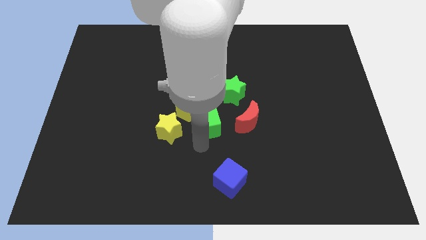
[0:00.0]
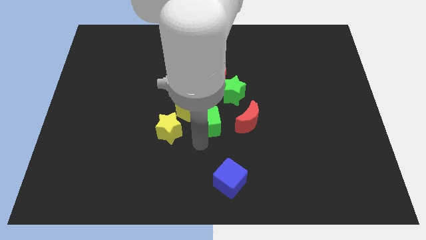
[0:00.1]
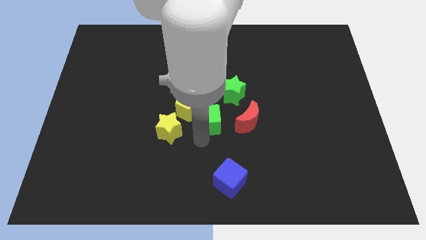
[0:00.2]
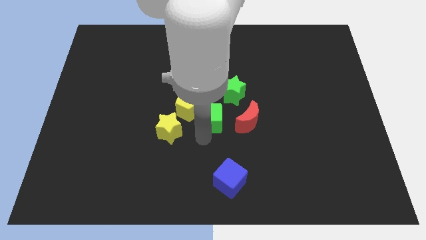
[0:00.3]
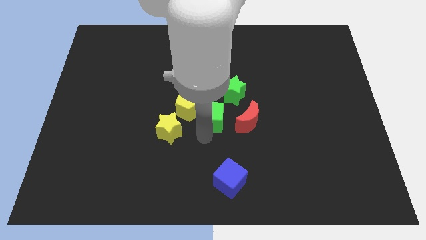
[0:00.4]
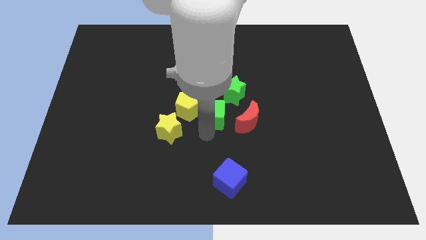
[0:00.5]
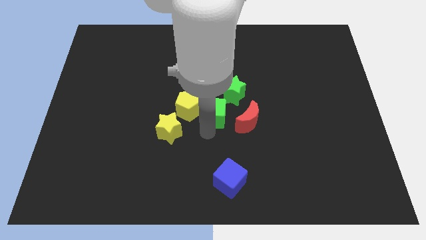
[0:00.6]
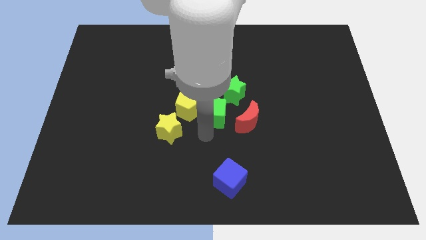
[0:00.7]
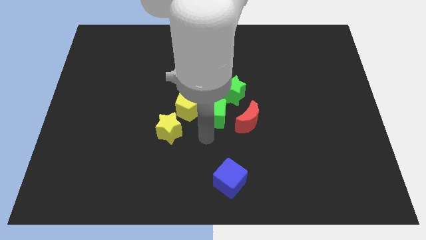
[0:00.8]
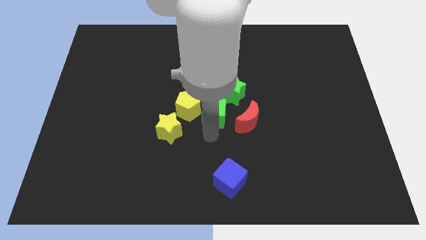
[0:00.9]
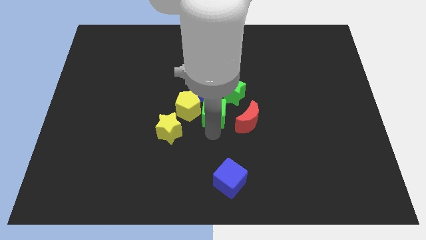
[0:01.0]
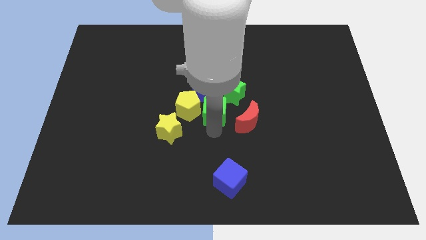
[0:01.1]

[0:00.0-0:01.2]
move the green cube to the right side of the yellow pentagon

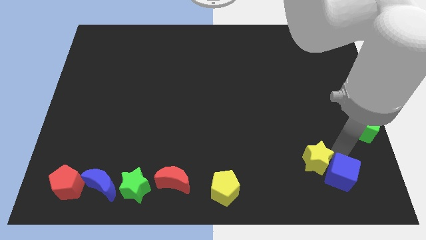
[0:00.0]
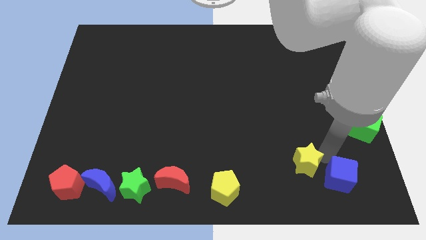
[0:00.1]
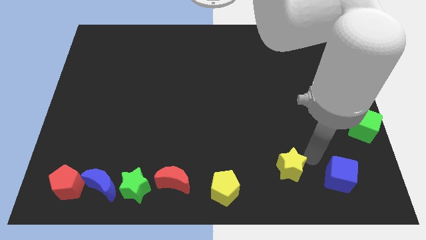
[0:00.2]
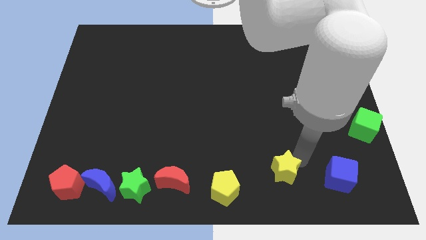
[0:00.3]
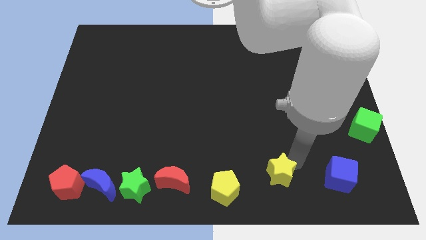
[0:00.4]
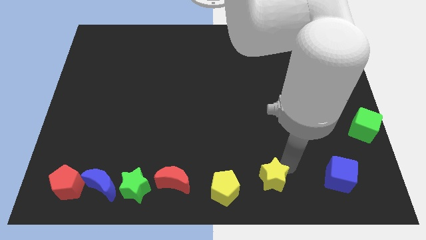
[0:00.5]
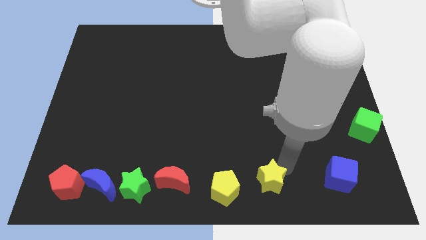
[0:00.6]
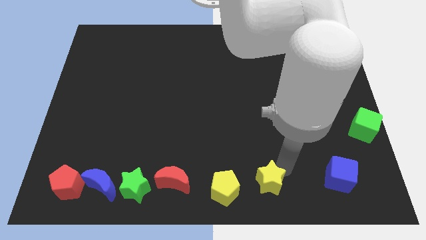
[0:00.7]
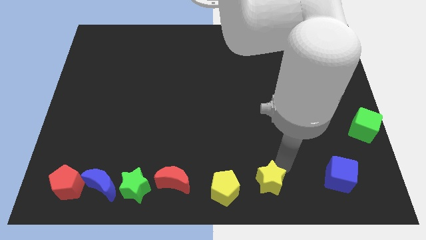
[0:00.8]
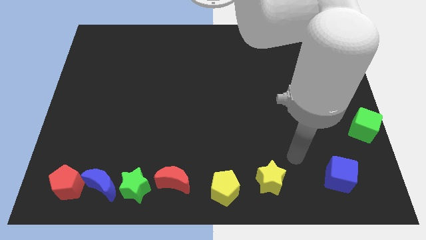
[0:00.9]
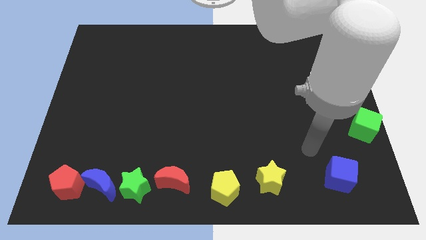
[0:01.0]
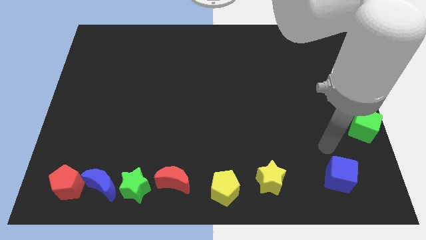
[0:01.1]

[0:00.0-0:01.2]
move the yellow star to the bottom center of the board

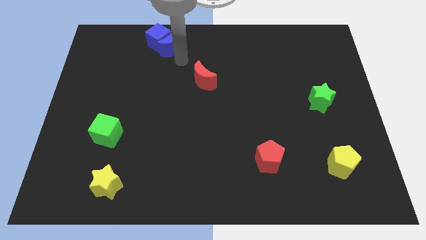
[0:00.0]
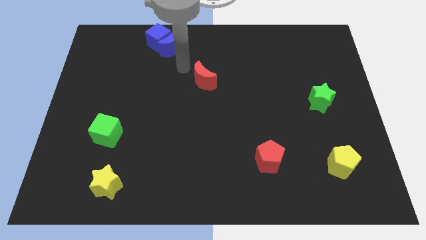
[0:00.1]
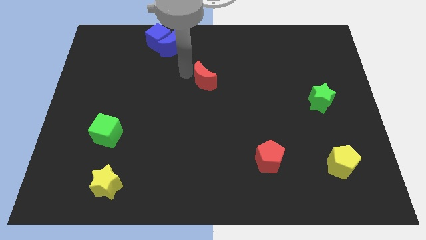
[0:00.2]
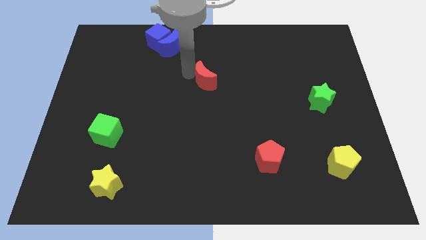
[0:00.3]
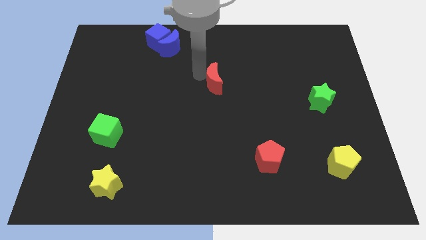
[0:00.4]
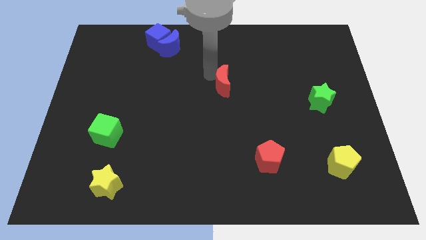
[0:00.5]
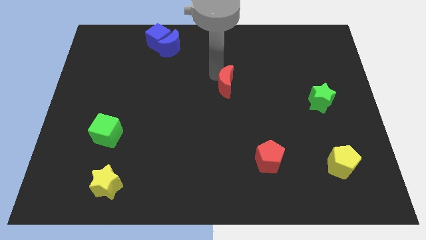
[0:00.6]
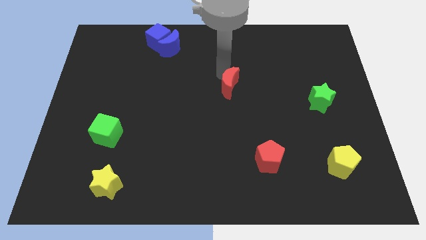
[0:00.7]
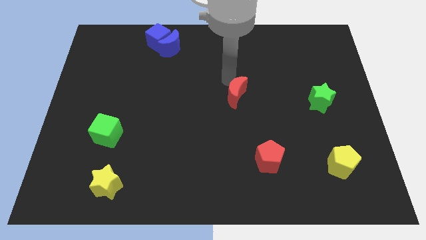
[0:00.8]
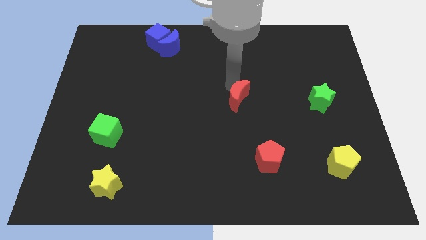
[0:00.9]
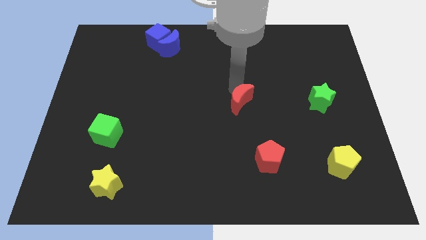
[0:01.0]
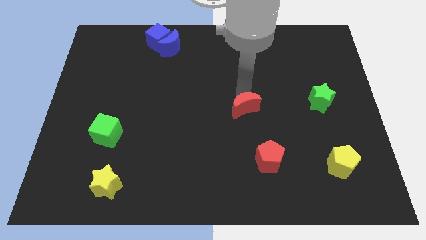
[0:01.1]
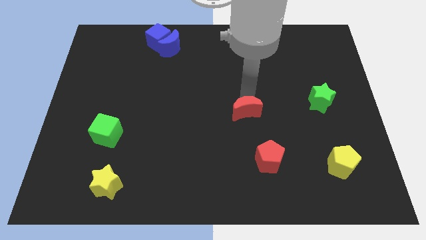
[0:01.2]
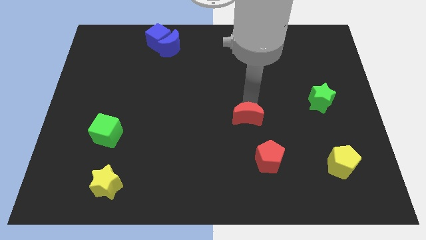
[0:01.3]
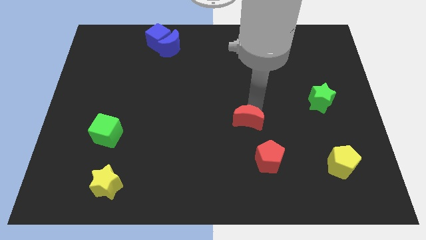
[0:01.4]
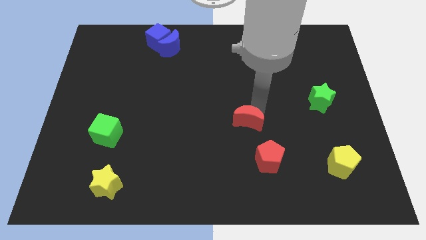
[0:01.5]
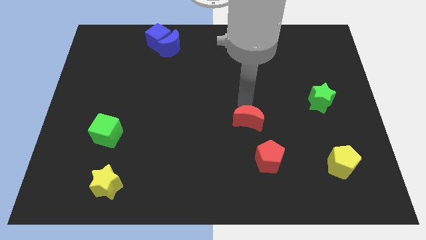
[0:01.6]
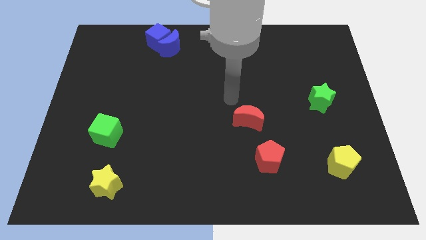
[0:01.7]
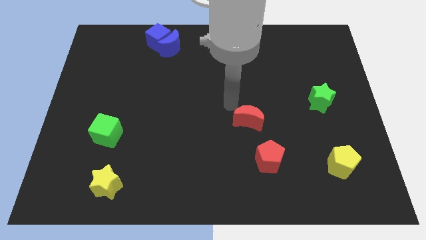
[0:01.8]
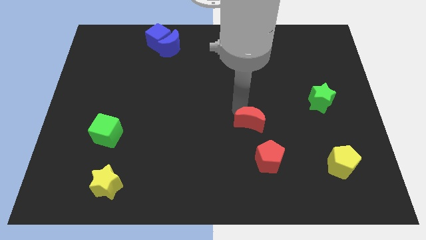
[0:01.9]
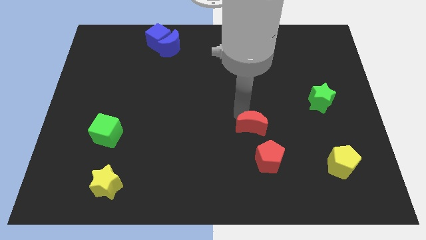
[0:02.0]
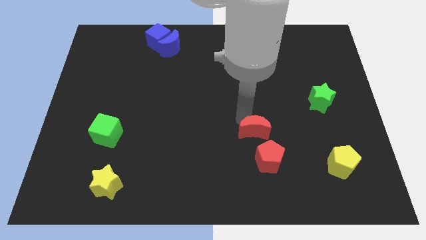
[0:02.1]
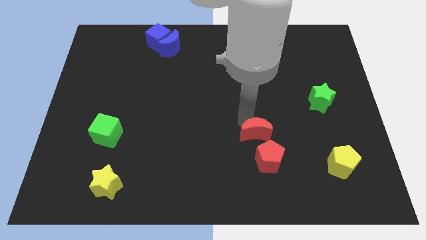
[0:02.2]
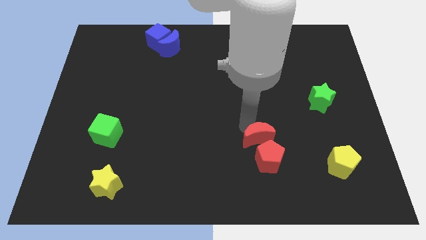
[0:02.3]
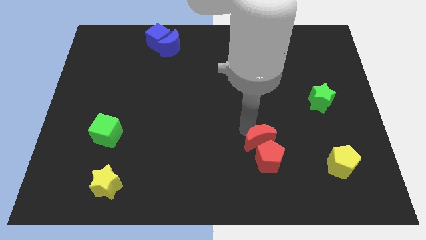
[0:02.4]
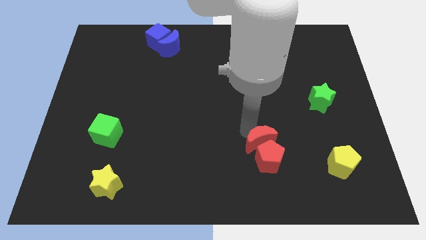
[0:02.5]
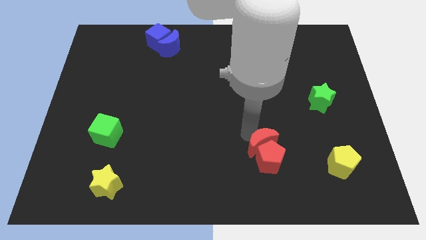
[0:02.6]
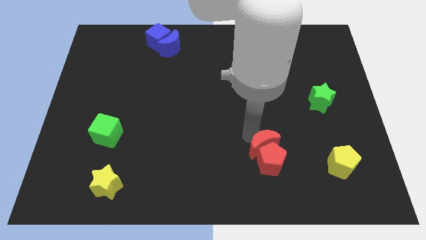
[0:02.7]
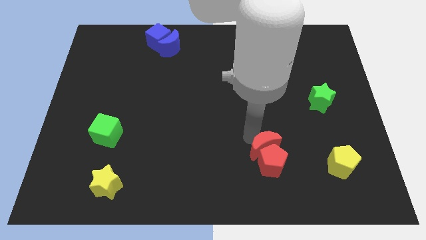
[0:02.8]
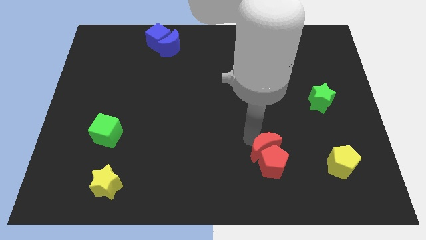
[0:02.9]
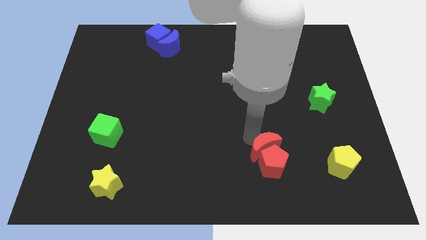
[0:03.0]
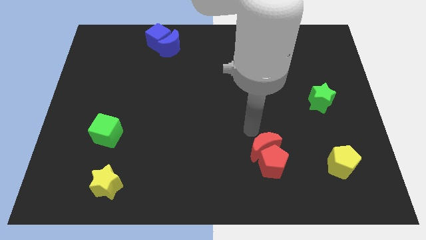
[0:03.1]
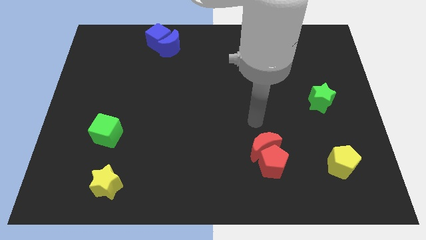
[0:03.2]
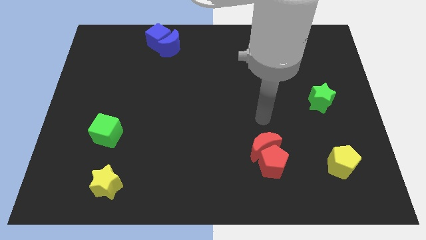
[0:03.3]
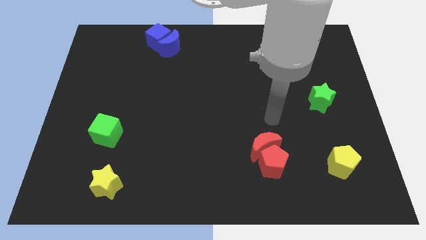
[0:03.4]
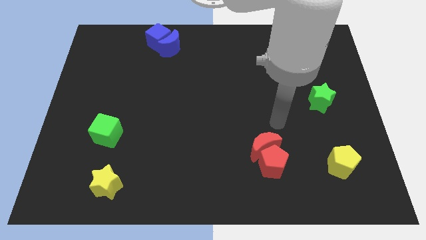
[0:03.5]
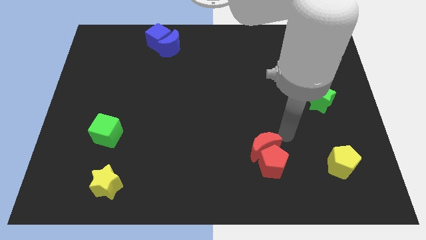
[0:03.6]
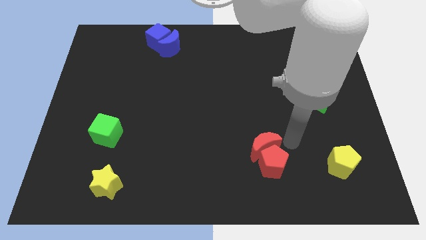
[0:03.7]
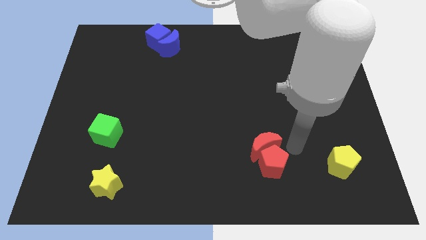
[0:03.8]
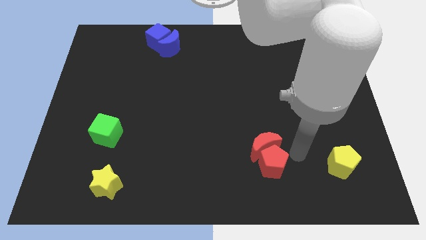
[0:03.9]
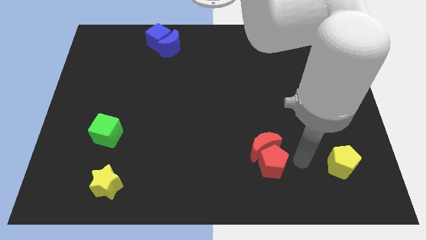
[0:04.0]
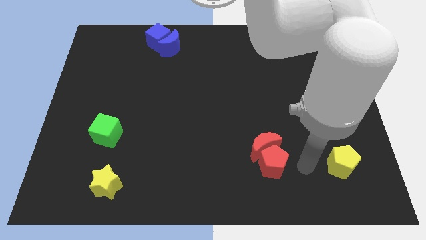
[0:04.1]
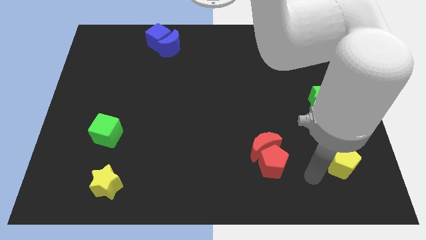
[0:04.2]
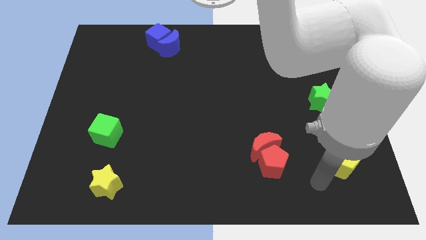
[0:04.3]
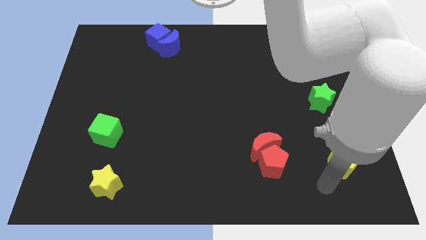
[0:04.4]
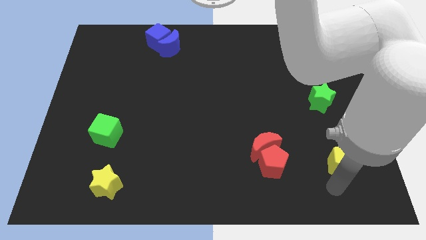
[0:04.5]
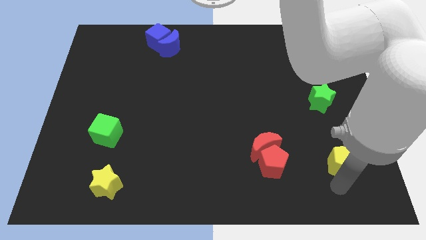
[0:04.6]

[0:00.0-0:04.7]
slide the red moon into the red pentagon

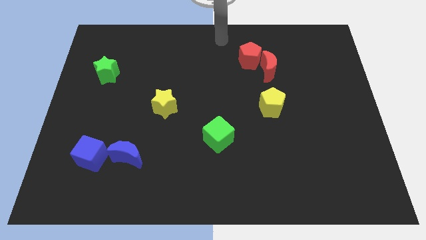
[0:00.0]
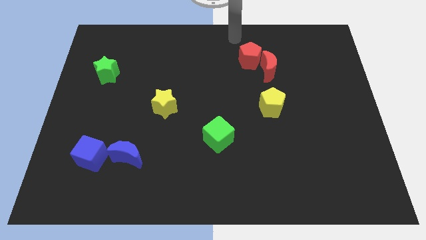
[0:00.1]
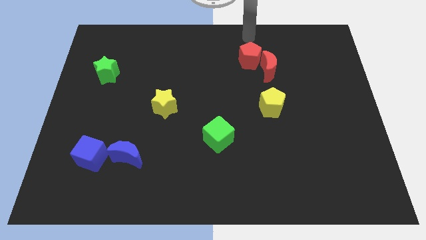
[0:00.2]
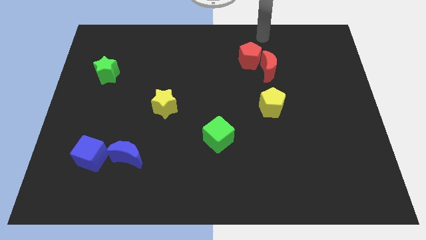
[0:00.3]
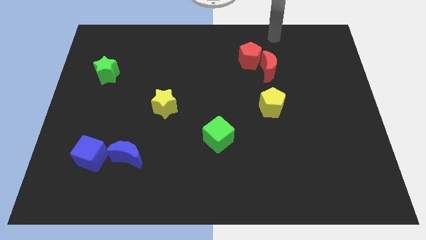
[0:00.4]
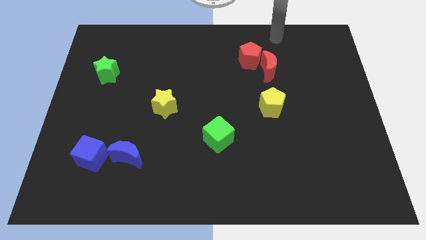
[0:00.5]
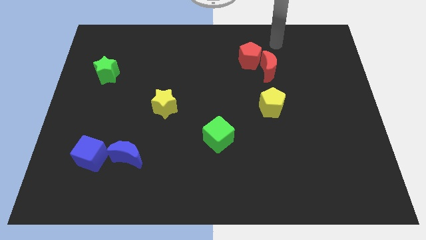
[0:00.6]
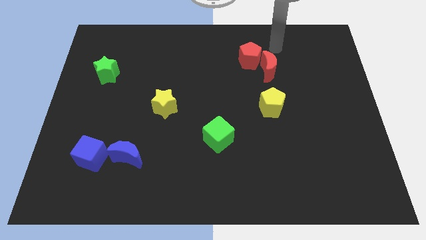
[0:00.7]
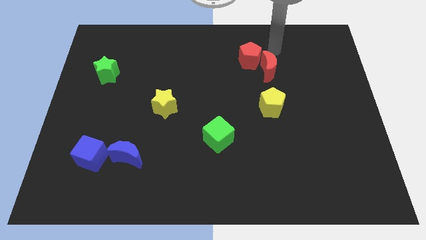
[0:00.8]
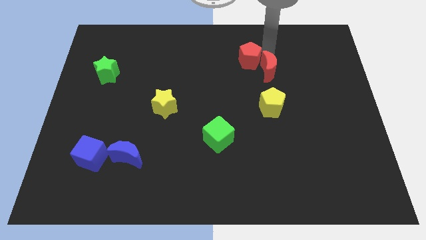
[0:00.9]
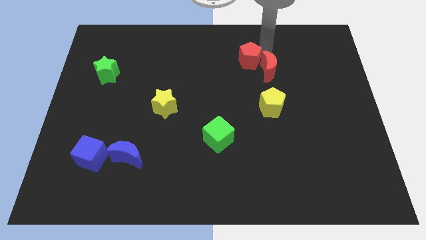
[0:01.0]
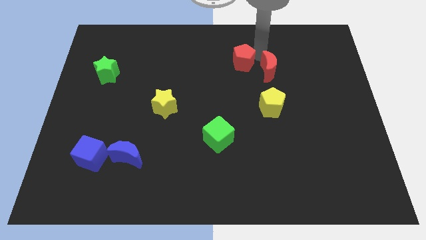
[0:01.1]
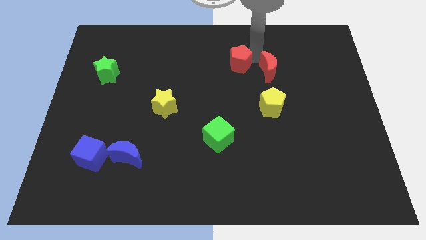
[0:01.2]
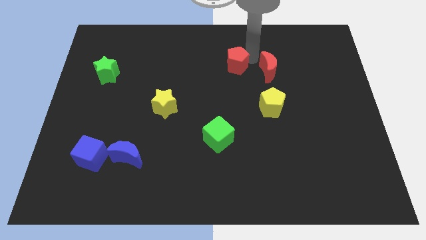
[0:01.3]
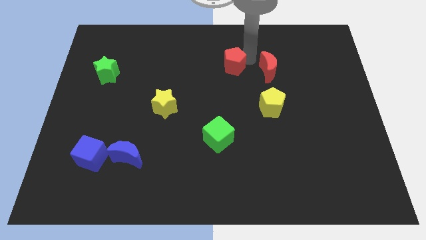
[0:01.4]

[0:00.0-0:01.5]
separate the red pentagon and red moon from each other

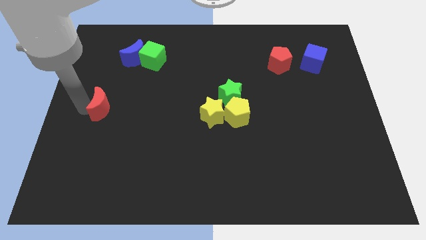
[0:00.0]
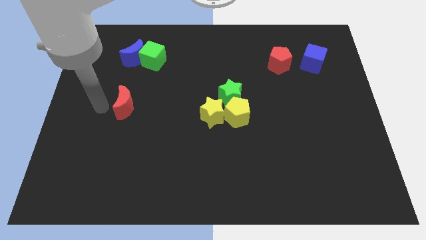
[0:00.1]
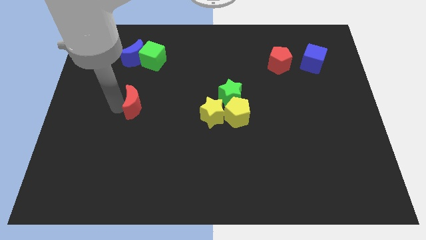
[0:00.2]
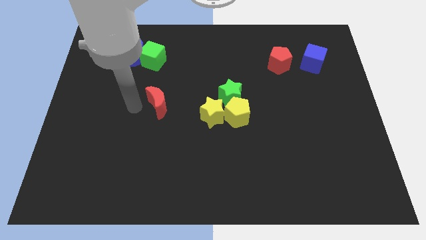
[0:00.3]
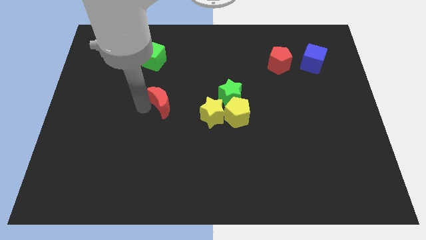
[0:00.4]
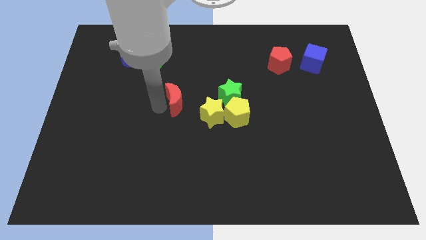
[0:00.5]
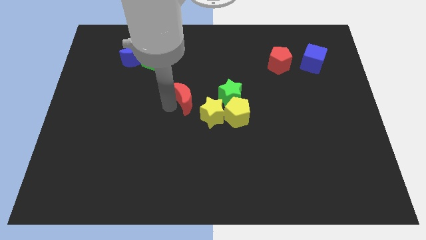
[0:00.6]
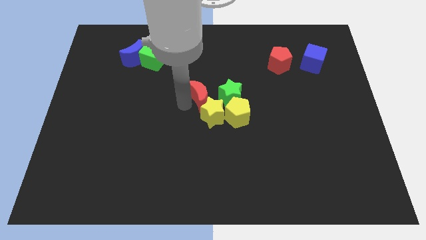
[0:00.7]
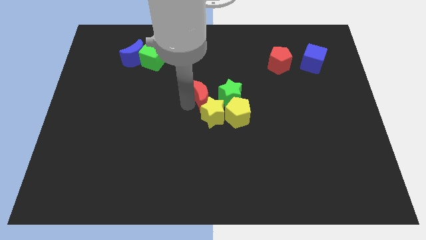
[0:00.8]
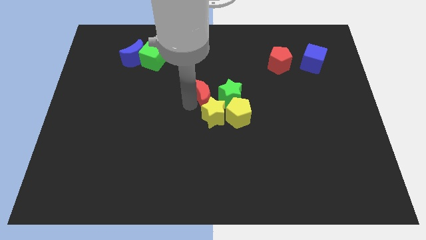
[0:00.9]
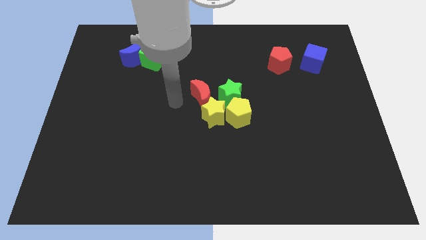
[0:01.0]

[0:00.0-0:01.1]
move the red crescent into the top left side of the yellow star
